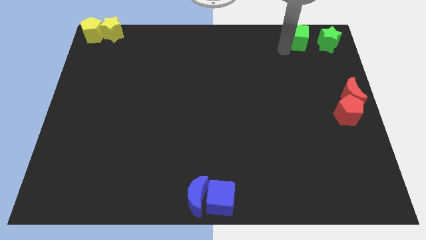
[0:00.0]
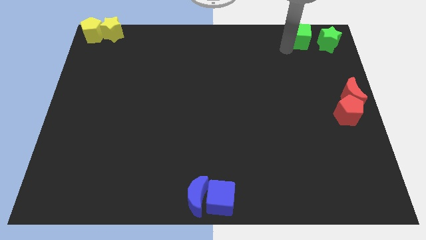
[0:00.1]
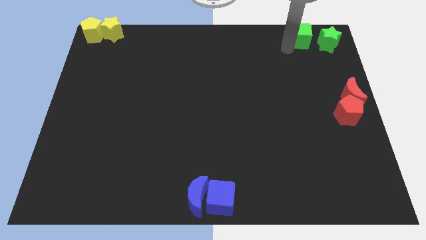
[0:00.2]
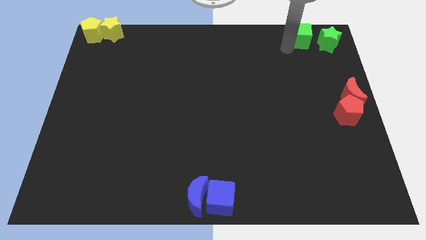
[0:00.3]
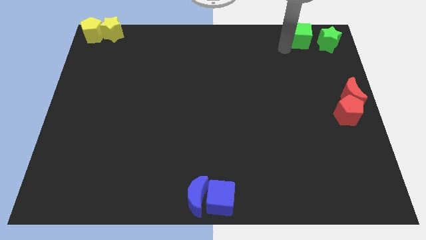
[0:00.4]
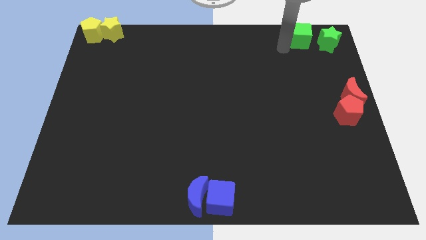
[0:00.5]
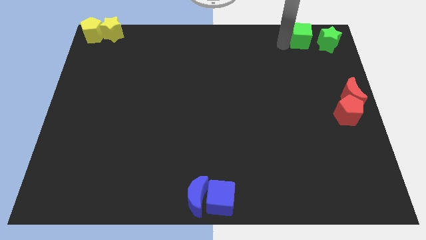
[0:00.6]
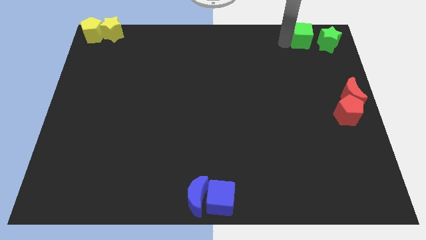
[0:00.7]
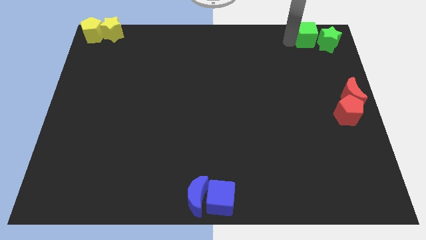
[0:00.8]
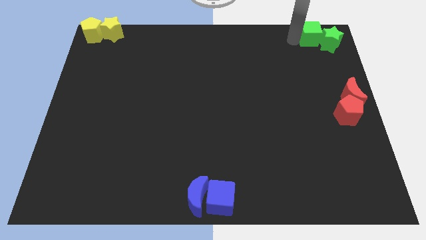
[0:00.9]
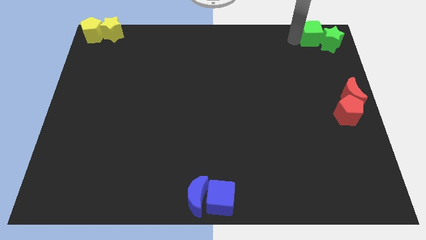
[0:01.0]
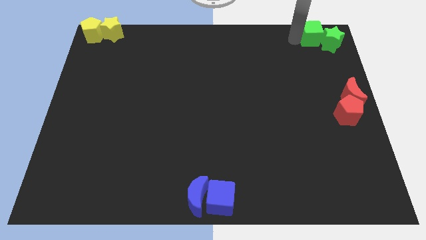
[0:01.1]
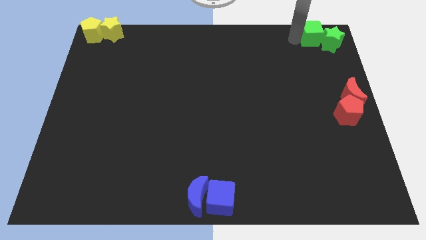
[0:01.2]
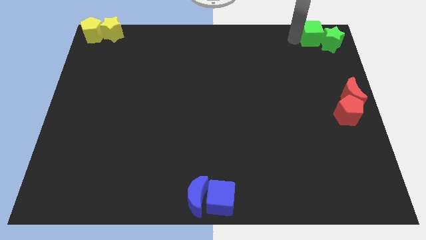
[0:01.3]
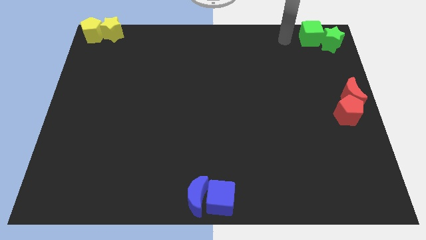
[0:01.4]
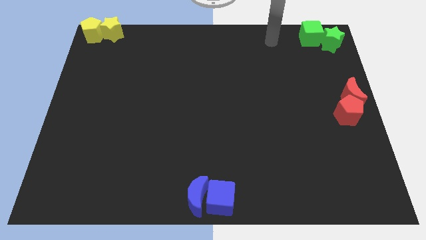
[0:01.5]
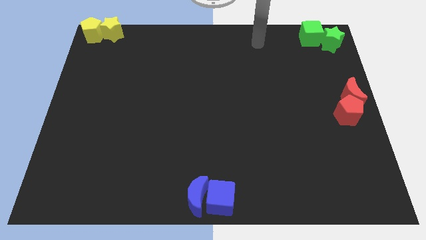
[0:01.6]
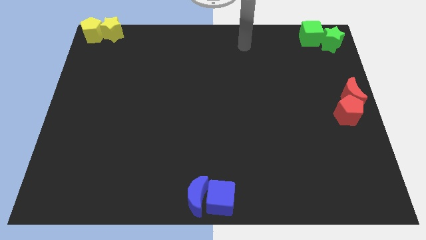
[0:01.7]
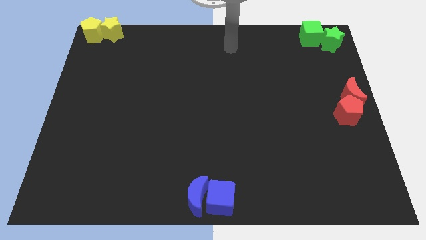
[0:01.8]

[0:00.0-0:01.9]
push the green cube into the green star

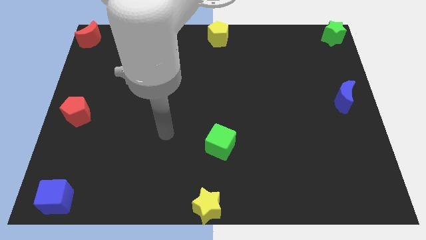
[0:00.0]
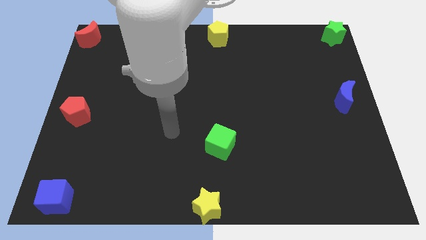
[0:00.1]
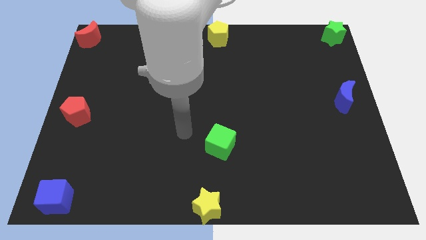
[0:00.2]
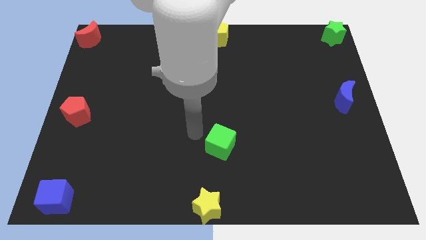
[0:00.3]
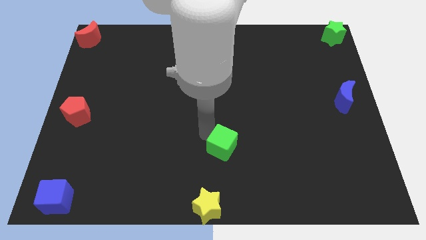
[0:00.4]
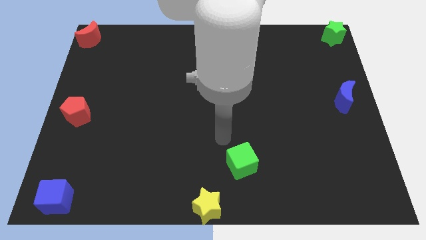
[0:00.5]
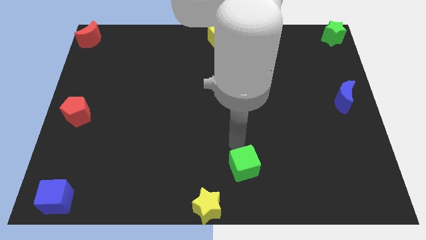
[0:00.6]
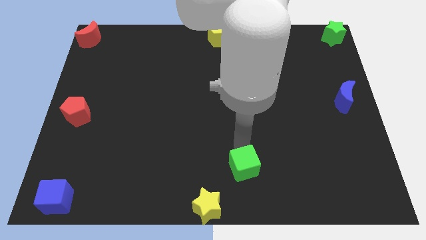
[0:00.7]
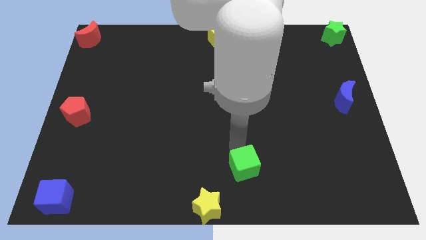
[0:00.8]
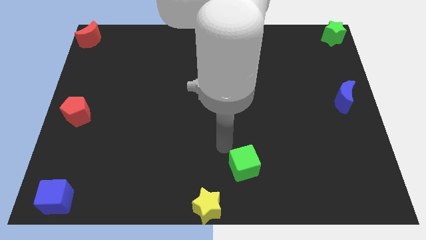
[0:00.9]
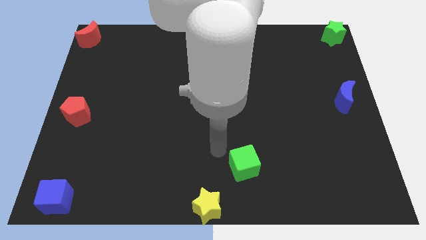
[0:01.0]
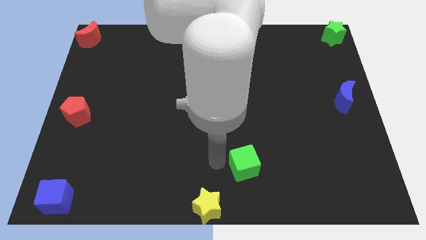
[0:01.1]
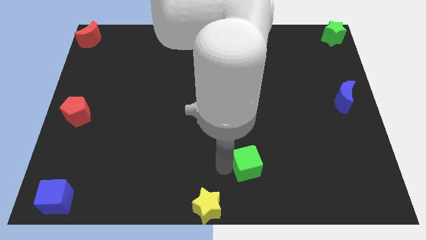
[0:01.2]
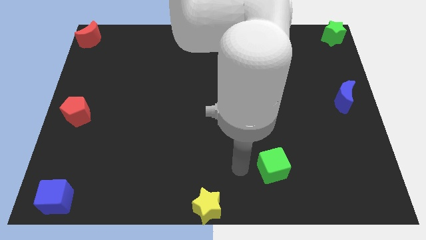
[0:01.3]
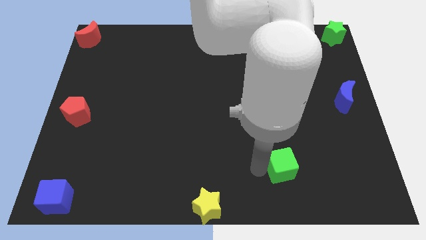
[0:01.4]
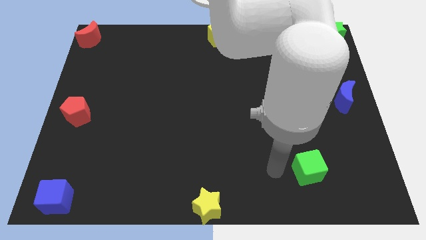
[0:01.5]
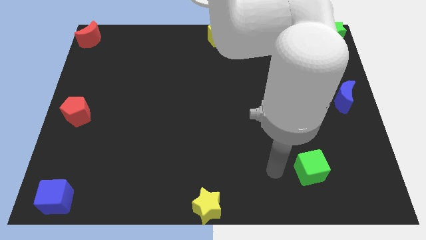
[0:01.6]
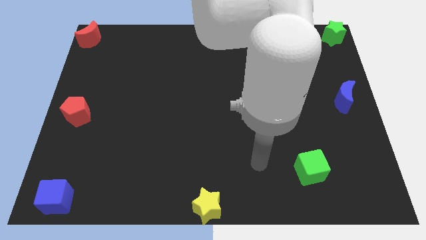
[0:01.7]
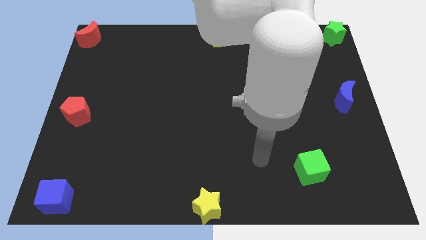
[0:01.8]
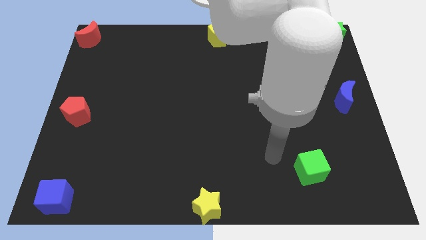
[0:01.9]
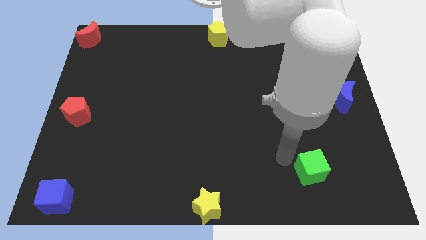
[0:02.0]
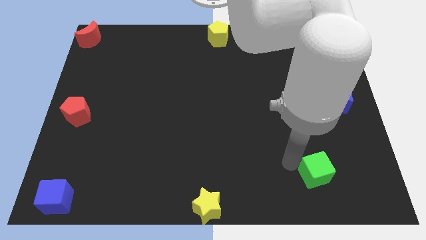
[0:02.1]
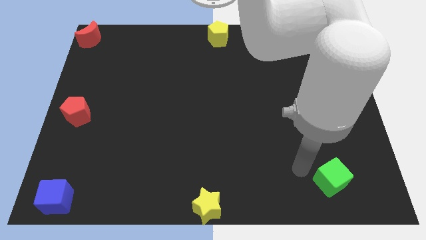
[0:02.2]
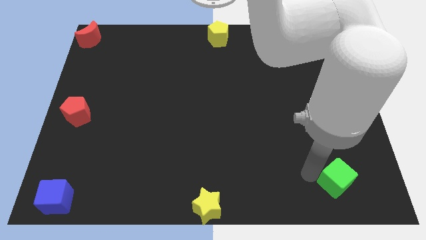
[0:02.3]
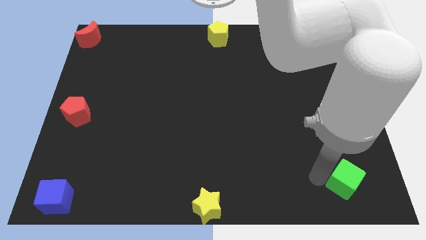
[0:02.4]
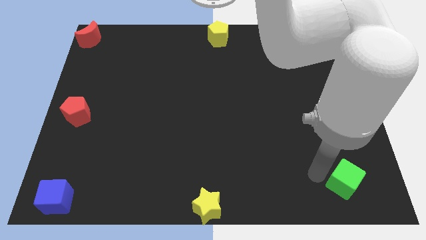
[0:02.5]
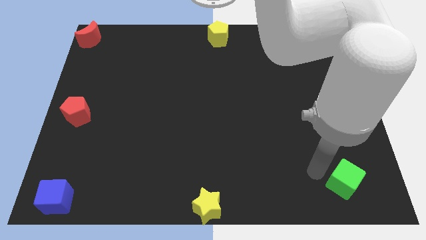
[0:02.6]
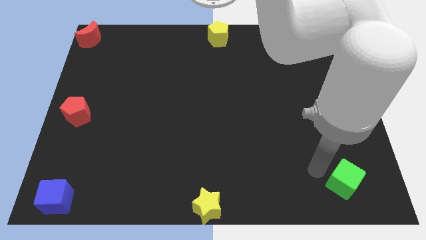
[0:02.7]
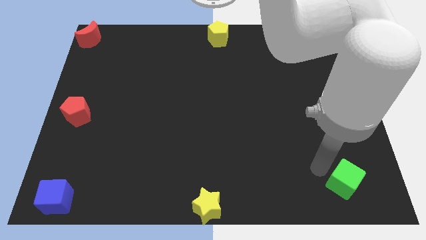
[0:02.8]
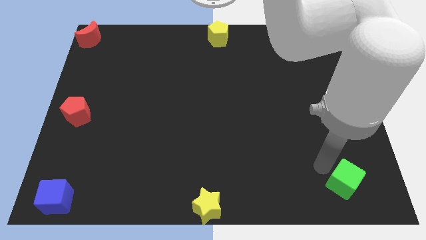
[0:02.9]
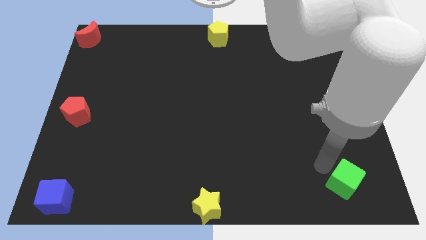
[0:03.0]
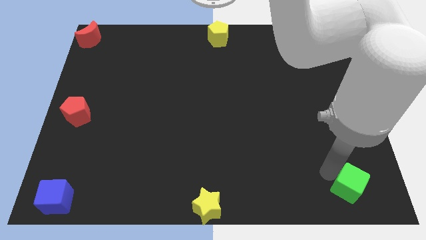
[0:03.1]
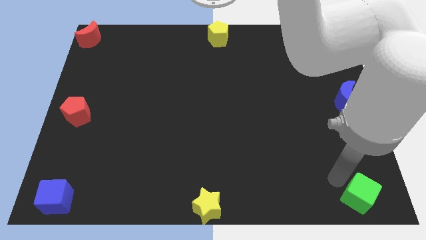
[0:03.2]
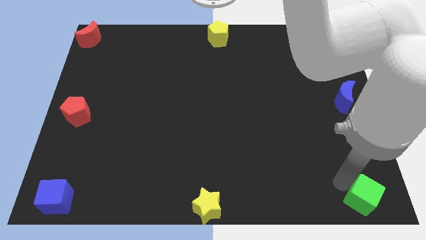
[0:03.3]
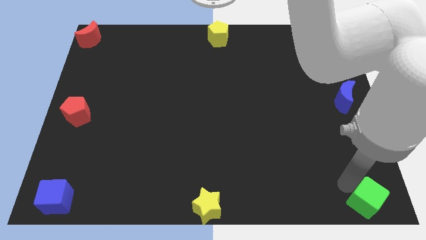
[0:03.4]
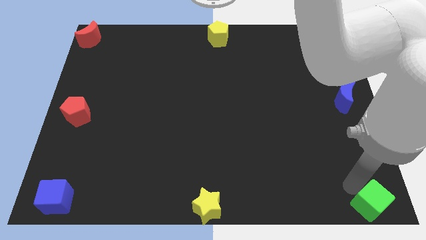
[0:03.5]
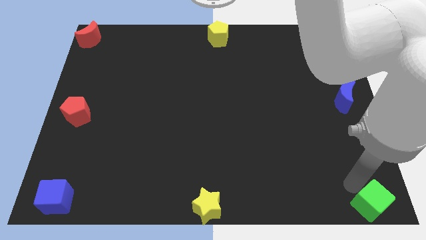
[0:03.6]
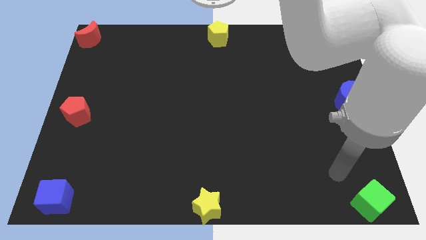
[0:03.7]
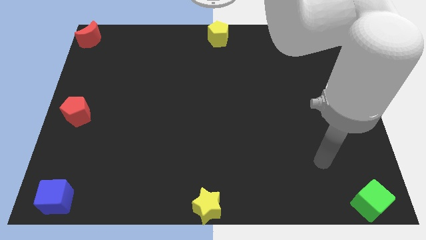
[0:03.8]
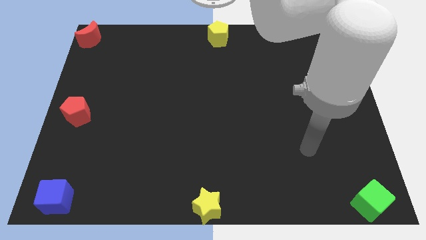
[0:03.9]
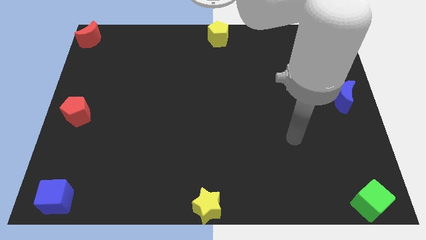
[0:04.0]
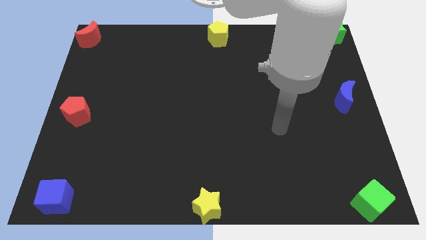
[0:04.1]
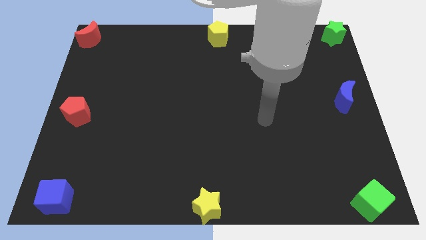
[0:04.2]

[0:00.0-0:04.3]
place the green cube at the bottom right corner

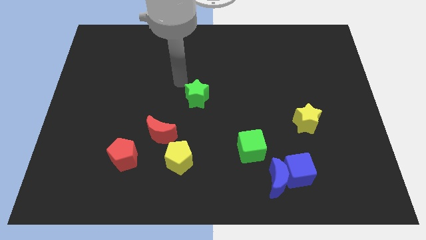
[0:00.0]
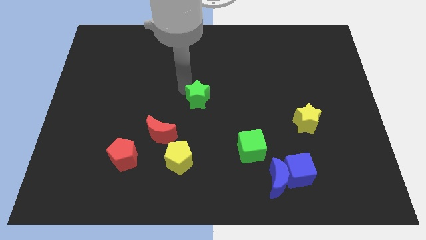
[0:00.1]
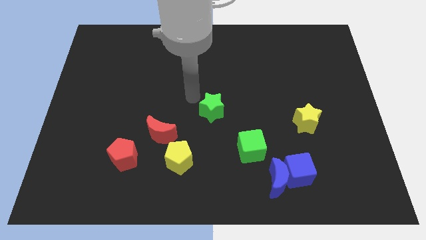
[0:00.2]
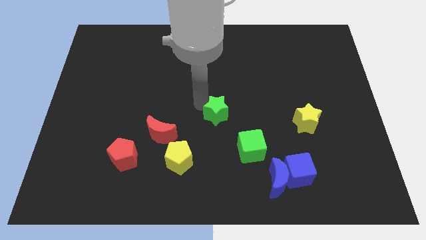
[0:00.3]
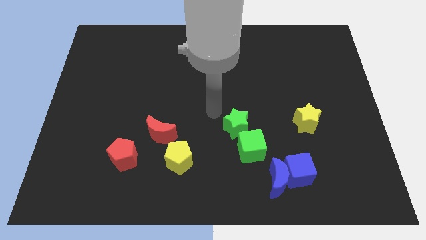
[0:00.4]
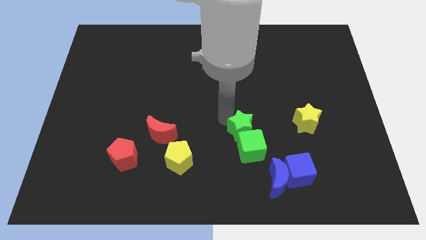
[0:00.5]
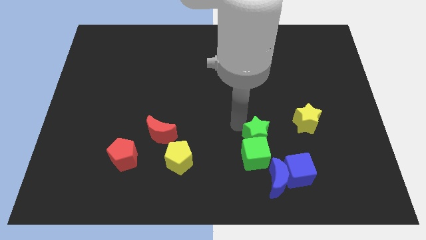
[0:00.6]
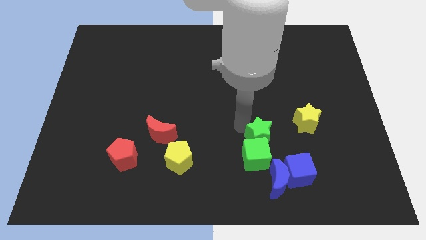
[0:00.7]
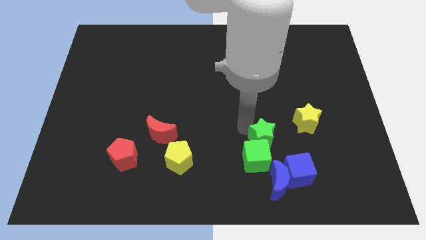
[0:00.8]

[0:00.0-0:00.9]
push the green star into the green cube

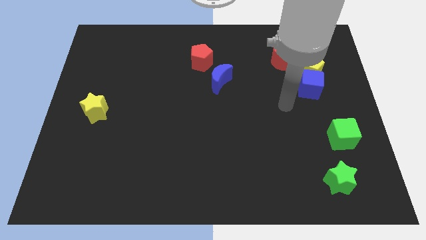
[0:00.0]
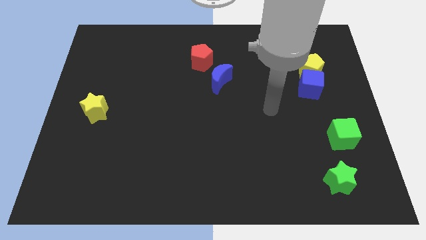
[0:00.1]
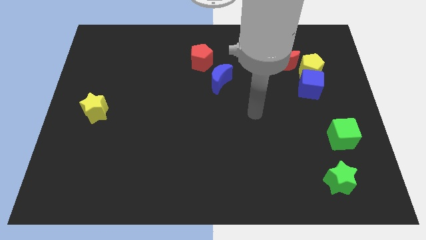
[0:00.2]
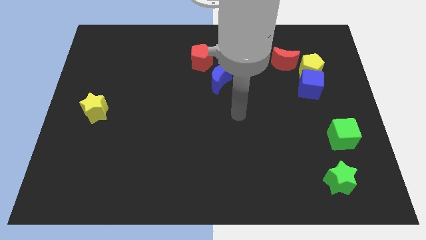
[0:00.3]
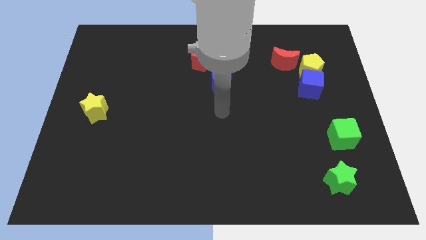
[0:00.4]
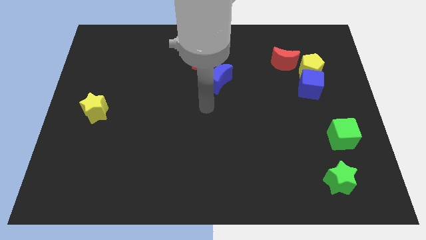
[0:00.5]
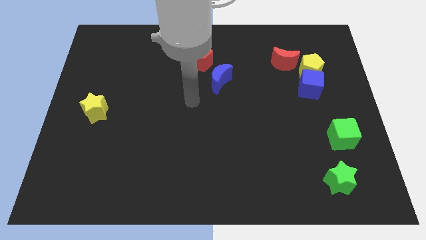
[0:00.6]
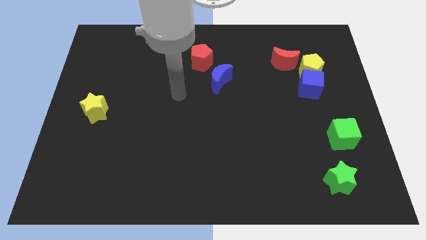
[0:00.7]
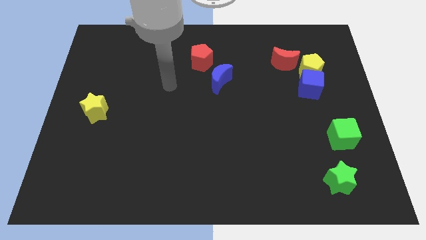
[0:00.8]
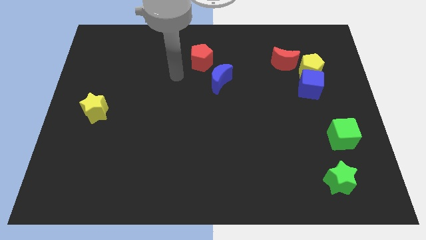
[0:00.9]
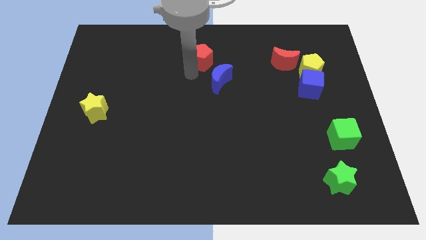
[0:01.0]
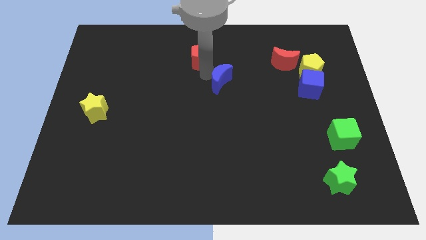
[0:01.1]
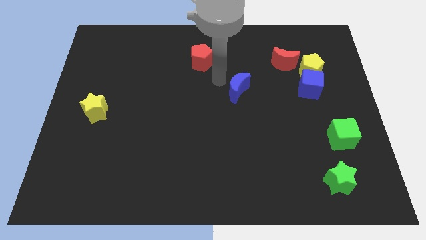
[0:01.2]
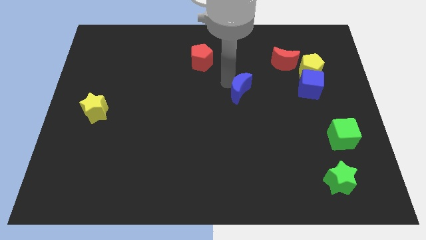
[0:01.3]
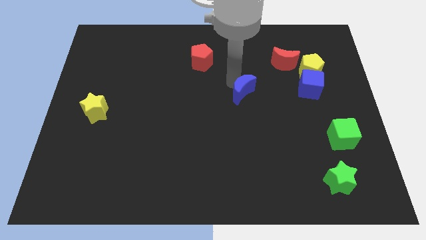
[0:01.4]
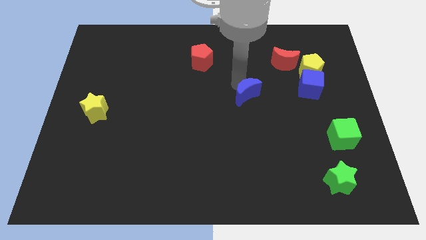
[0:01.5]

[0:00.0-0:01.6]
push the blue crescent towards green cube
